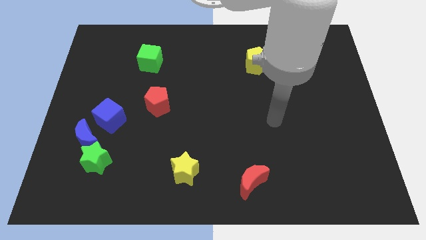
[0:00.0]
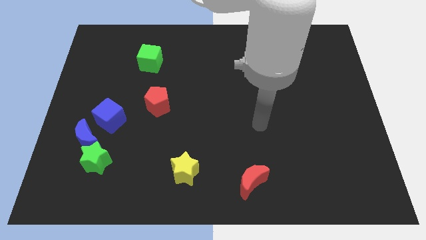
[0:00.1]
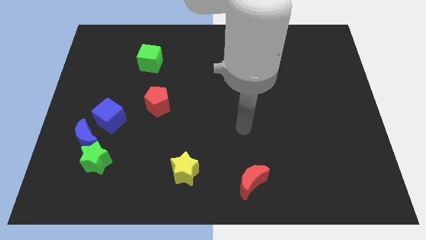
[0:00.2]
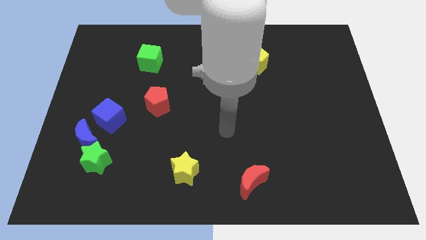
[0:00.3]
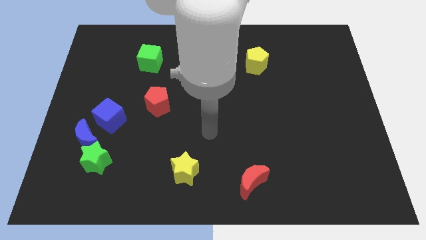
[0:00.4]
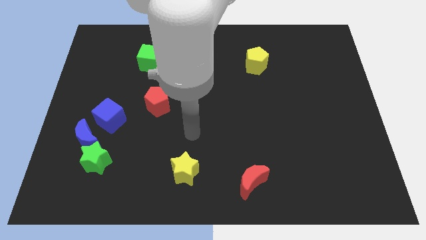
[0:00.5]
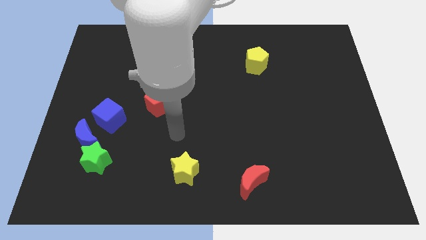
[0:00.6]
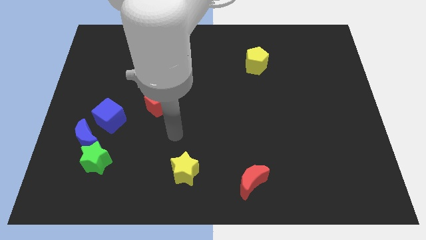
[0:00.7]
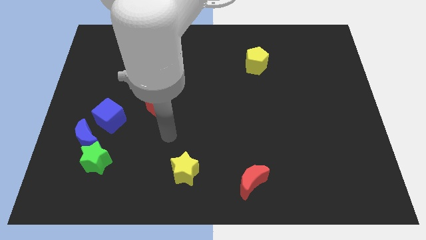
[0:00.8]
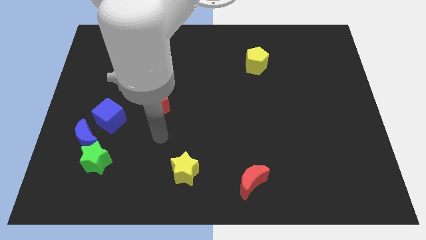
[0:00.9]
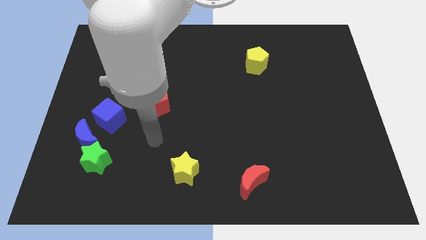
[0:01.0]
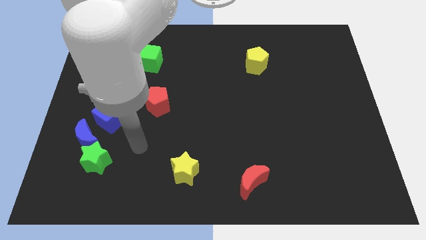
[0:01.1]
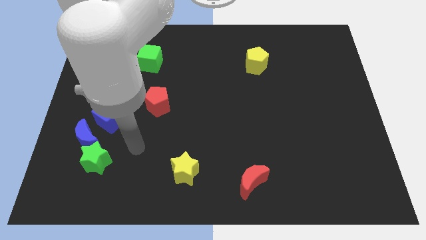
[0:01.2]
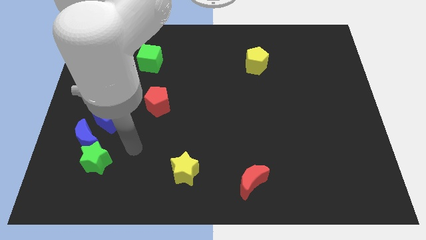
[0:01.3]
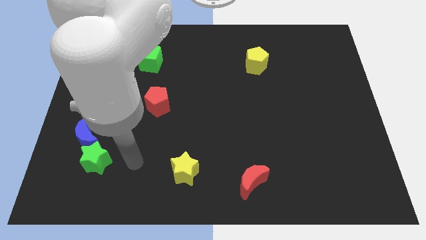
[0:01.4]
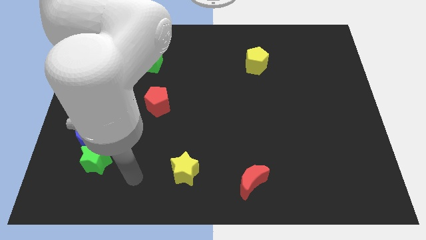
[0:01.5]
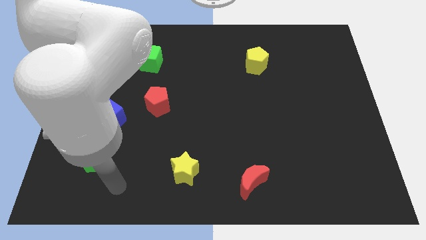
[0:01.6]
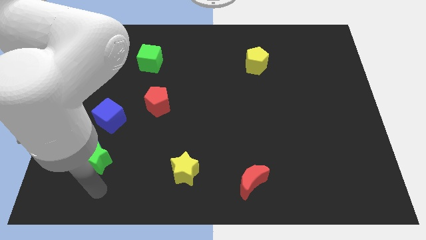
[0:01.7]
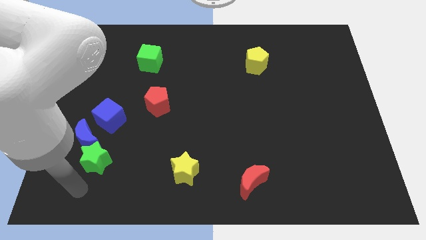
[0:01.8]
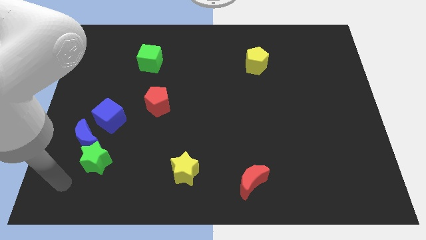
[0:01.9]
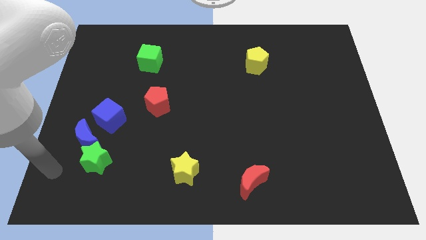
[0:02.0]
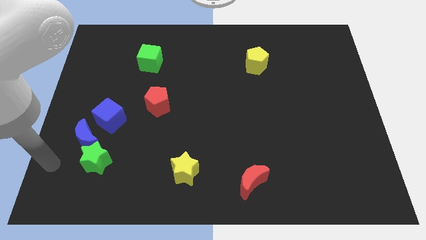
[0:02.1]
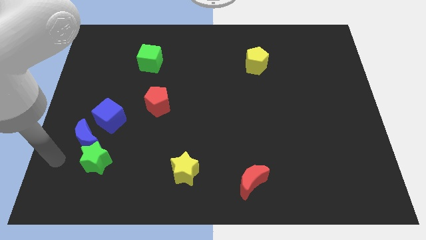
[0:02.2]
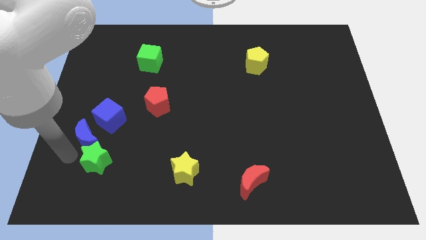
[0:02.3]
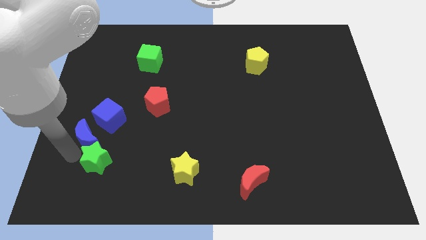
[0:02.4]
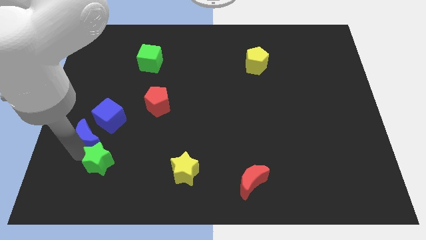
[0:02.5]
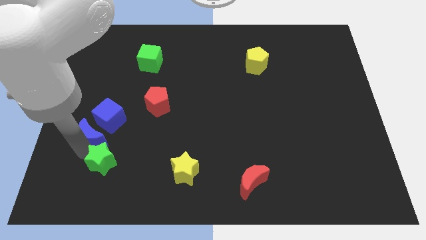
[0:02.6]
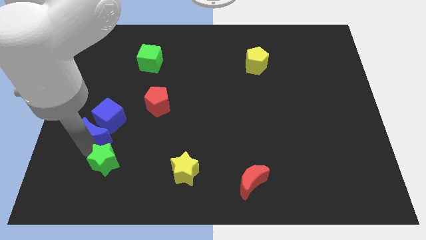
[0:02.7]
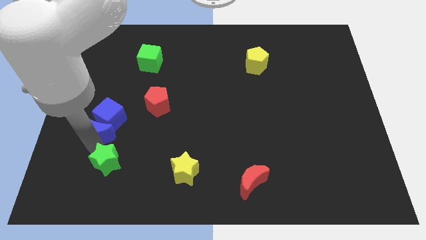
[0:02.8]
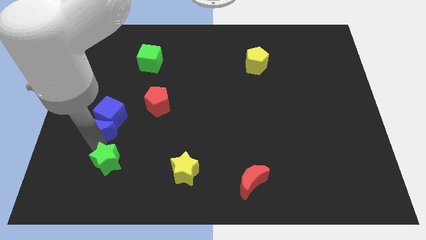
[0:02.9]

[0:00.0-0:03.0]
move your arm below the blue crescent

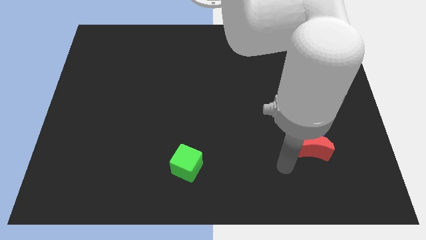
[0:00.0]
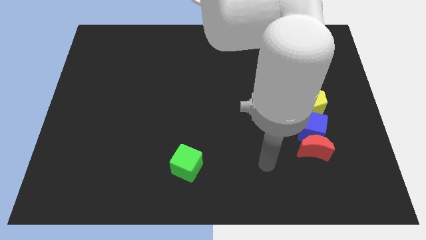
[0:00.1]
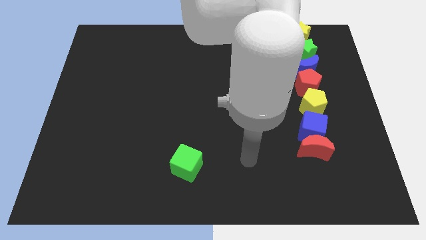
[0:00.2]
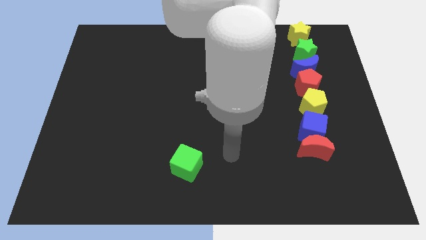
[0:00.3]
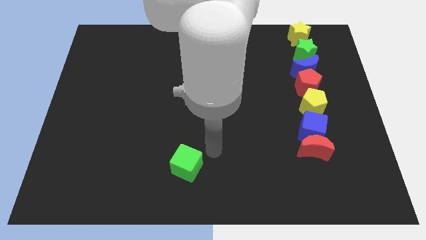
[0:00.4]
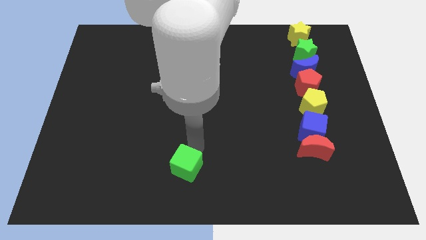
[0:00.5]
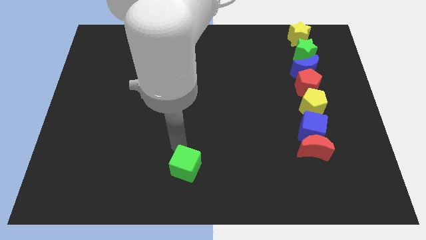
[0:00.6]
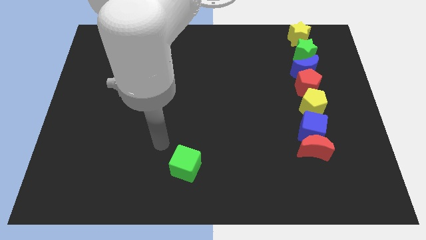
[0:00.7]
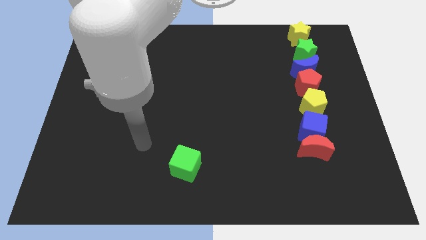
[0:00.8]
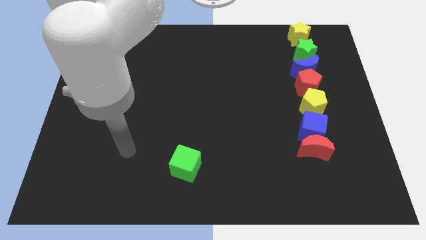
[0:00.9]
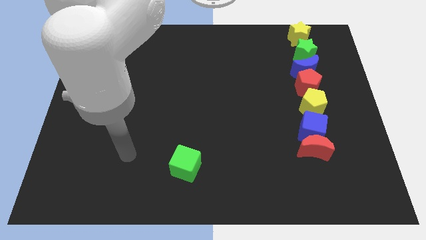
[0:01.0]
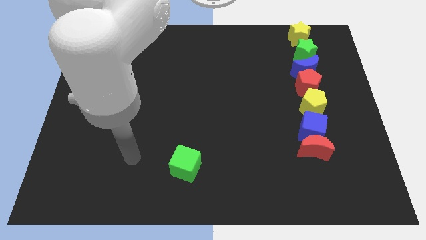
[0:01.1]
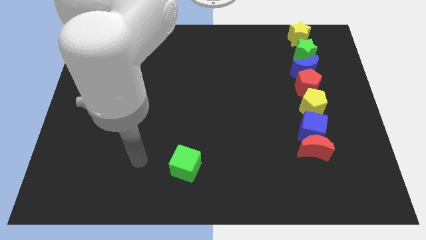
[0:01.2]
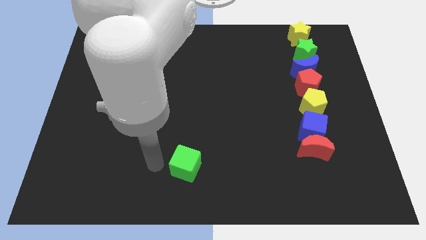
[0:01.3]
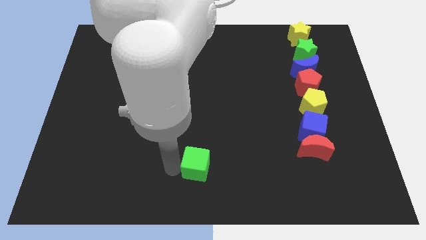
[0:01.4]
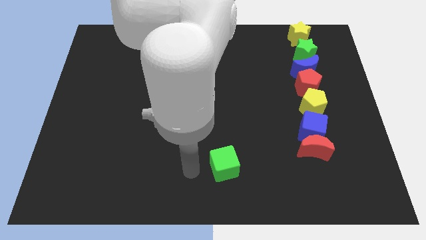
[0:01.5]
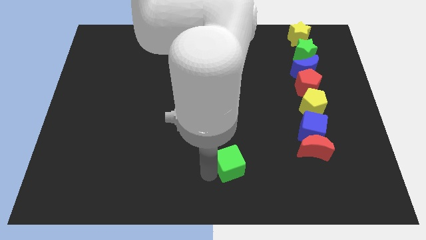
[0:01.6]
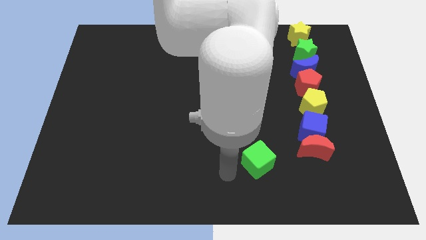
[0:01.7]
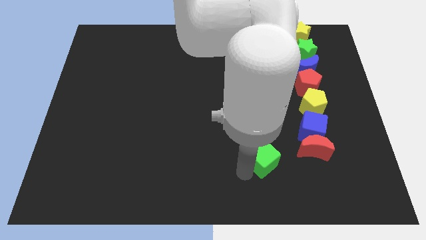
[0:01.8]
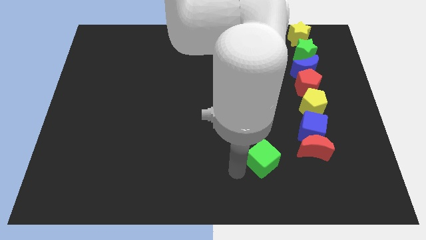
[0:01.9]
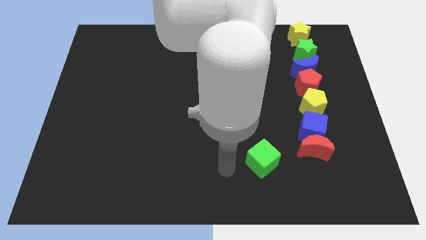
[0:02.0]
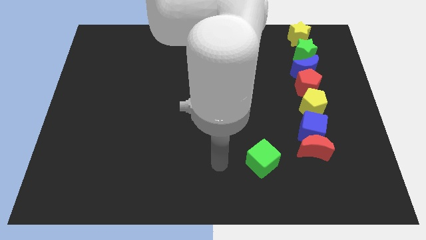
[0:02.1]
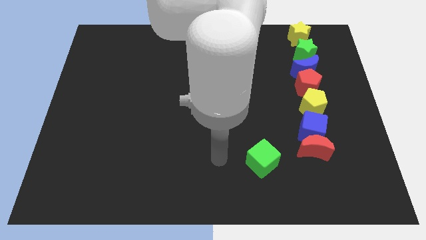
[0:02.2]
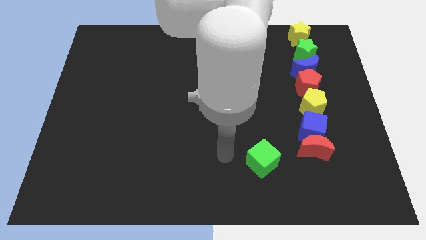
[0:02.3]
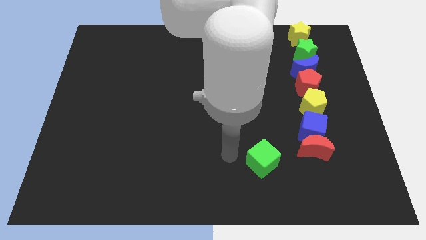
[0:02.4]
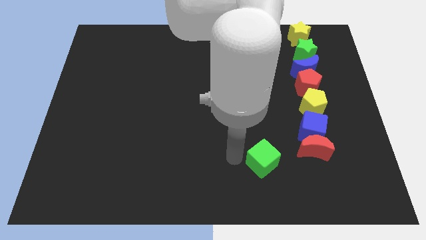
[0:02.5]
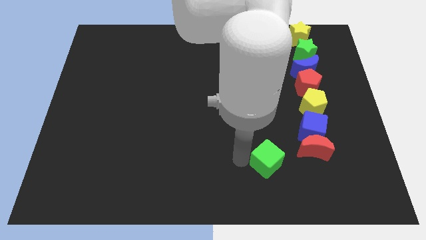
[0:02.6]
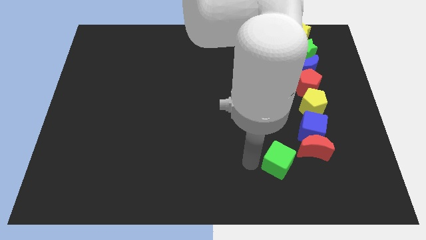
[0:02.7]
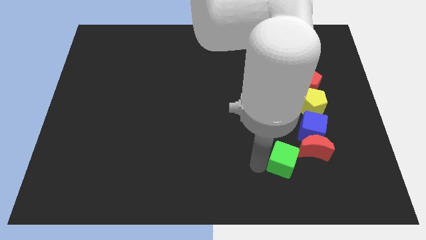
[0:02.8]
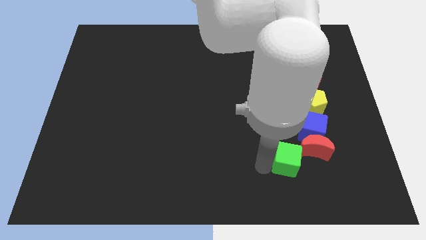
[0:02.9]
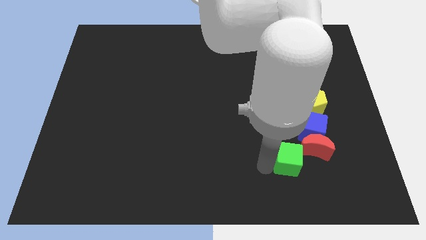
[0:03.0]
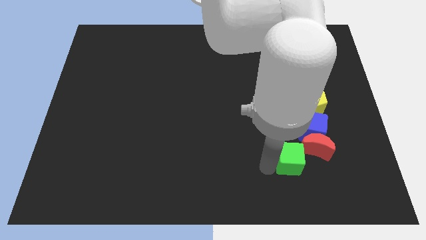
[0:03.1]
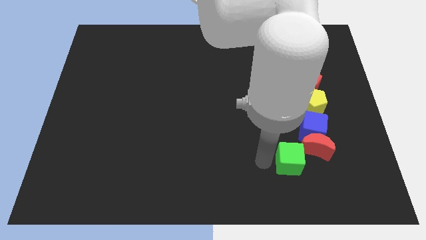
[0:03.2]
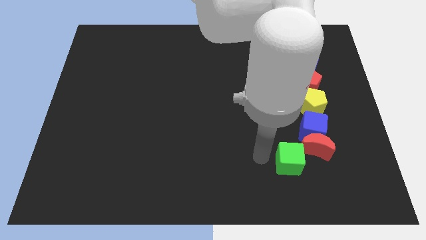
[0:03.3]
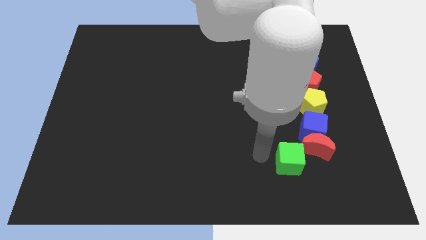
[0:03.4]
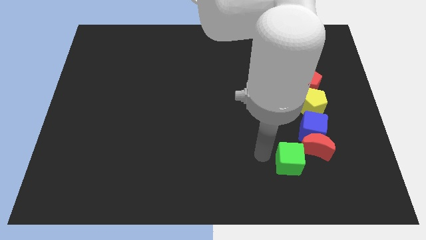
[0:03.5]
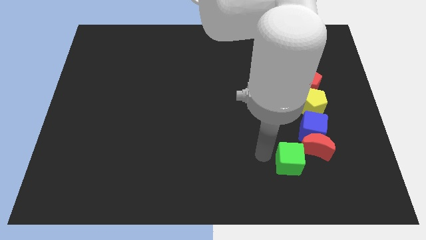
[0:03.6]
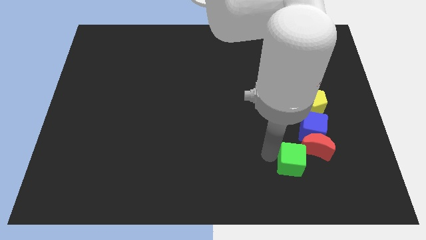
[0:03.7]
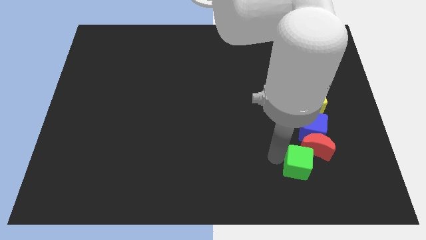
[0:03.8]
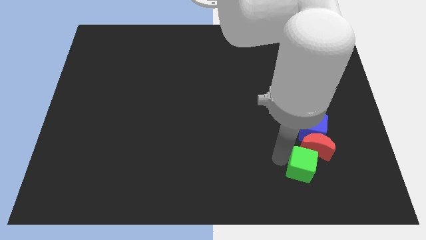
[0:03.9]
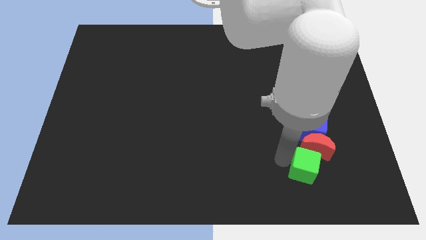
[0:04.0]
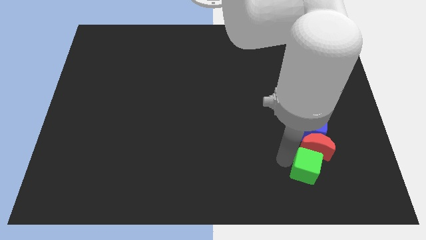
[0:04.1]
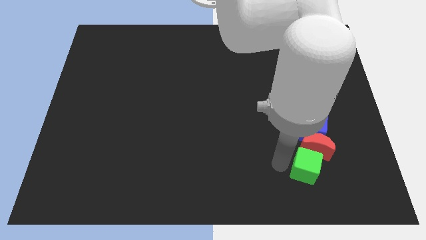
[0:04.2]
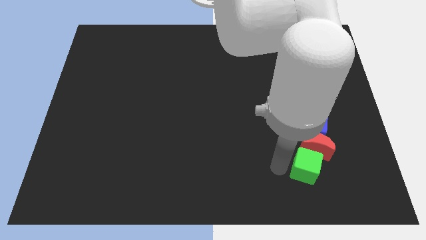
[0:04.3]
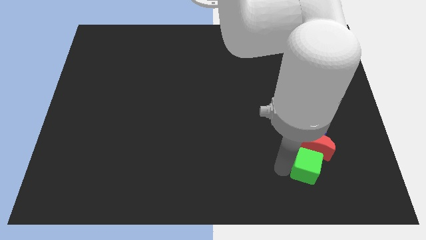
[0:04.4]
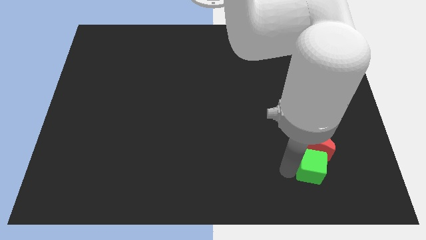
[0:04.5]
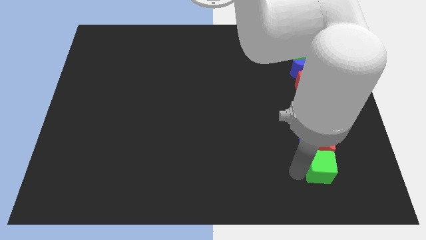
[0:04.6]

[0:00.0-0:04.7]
place the green cube below the red moon

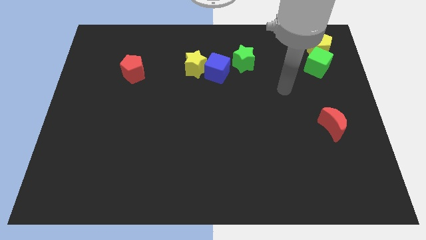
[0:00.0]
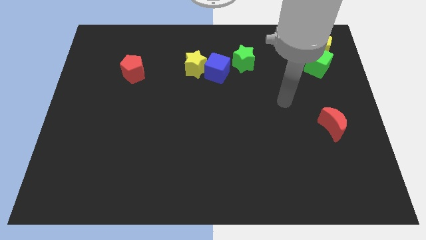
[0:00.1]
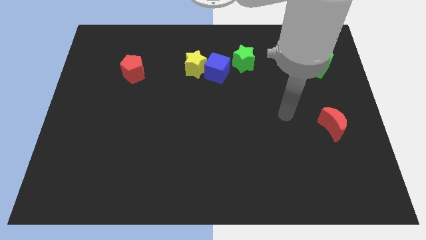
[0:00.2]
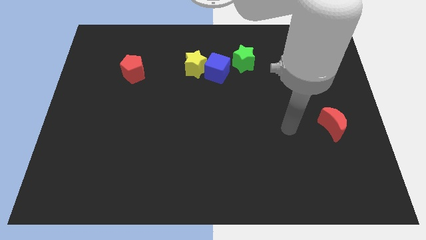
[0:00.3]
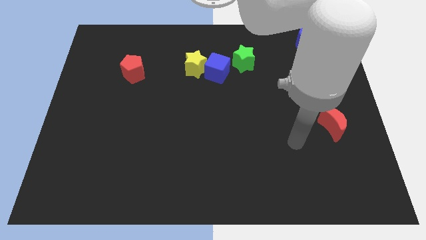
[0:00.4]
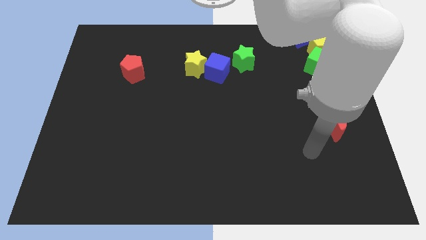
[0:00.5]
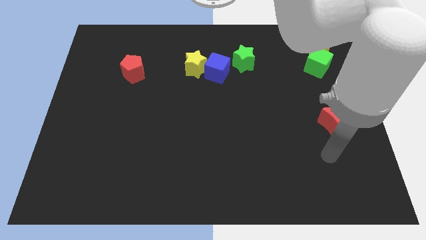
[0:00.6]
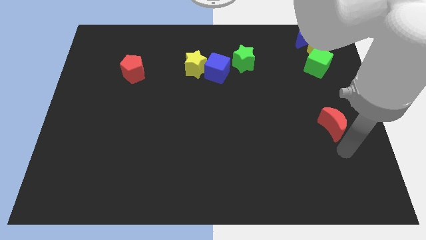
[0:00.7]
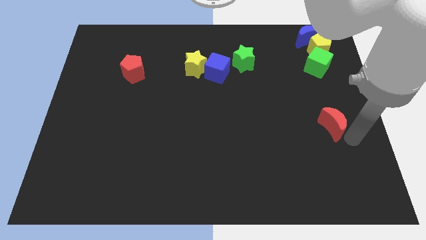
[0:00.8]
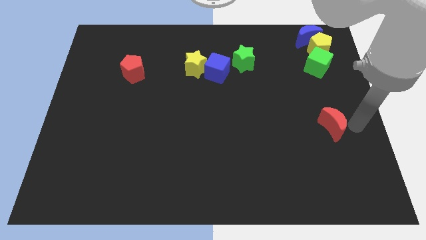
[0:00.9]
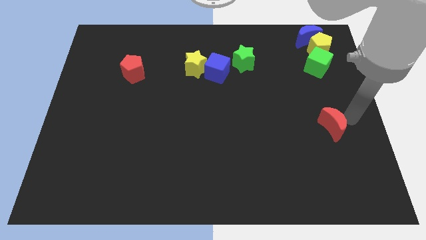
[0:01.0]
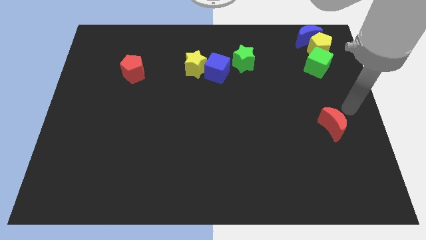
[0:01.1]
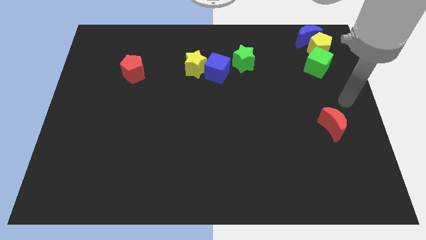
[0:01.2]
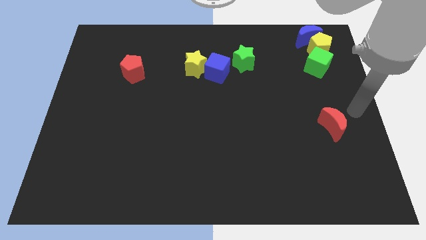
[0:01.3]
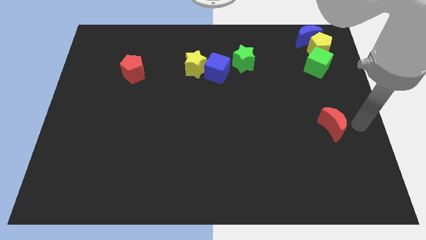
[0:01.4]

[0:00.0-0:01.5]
point your arm to the right side of the red crescent
